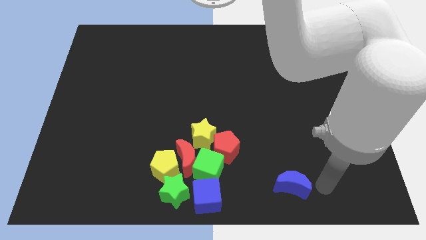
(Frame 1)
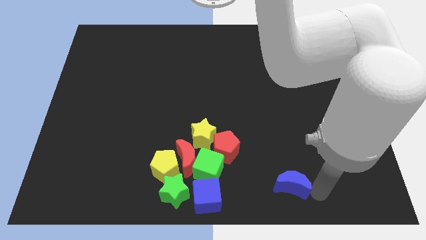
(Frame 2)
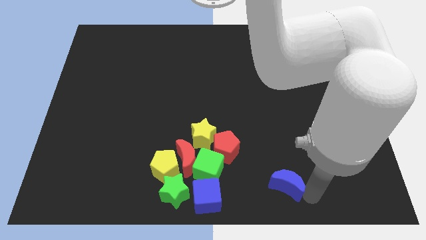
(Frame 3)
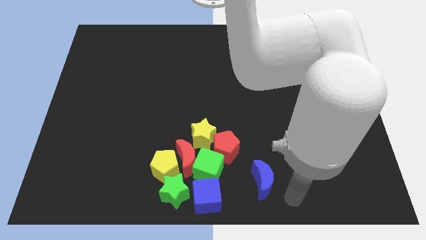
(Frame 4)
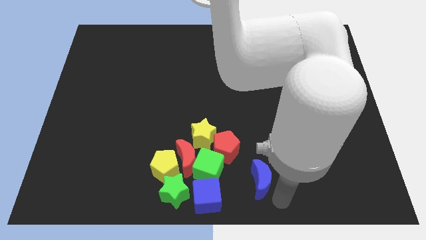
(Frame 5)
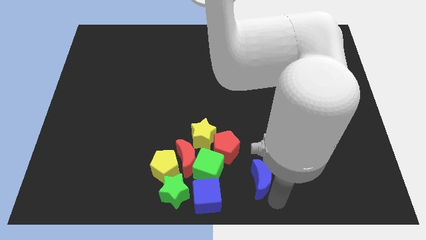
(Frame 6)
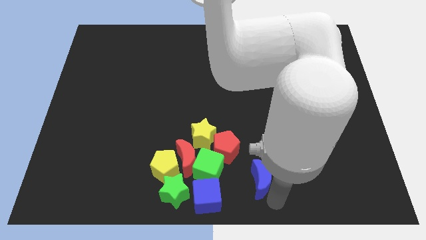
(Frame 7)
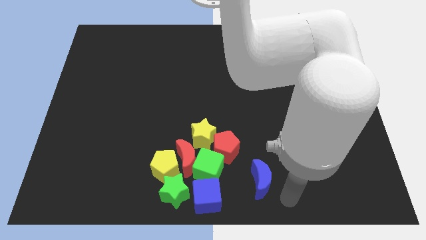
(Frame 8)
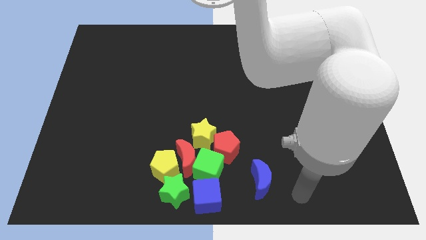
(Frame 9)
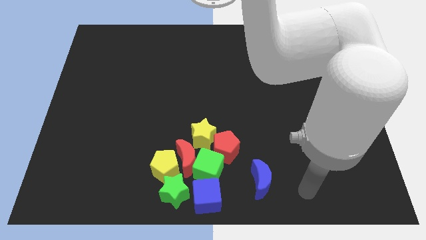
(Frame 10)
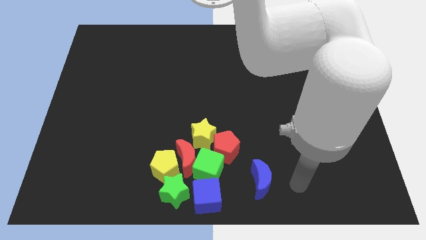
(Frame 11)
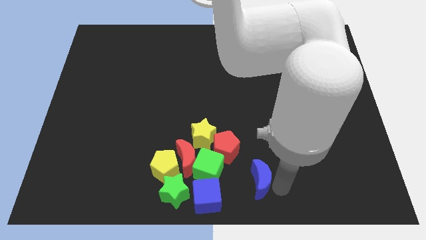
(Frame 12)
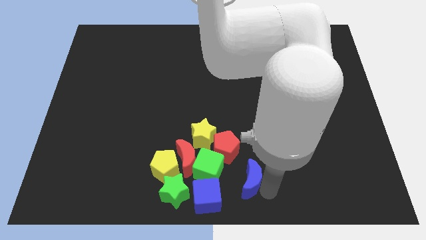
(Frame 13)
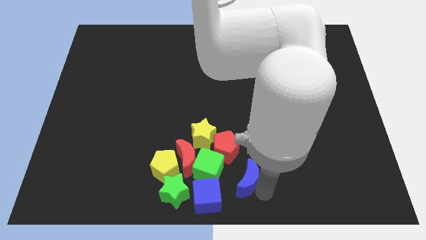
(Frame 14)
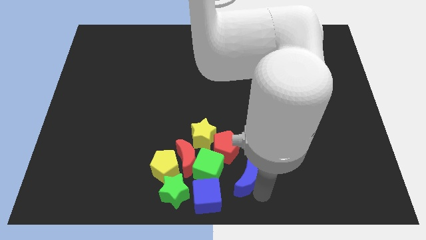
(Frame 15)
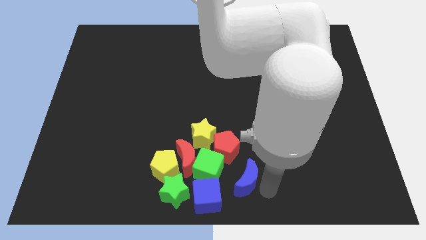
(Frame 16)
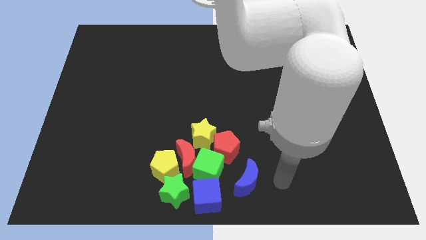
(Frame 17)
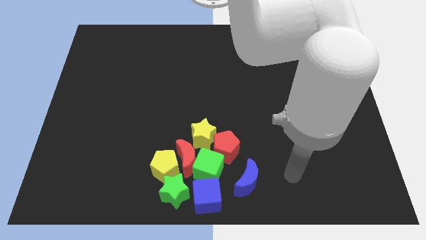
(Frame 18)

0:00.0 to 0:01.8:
push the blue moon towards group of blocks

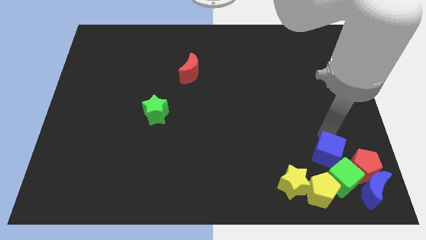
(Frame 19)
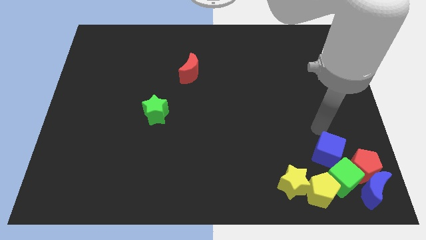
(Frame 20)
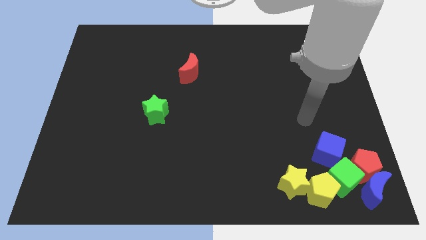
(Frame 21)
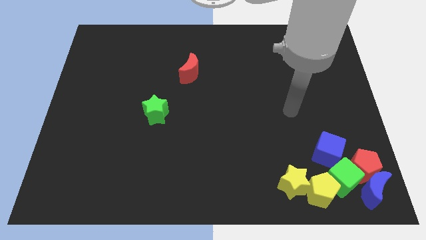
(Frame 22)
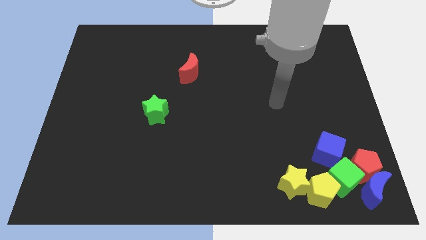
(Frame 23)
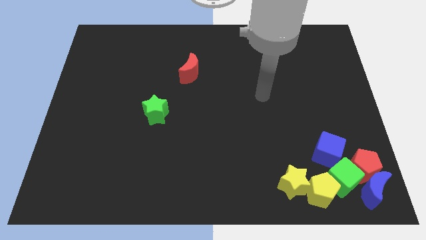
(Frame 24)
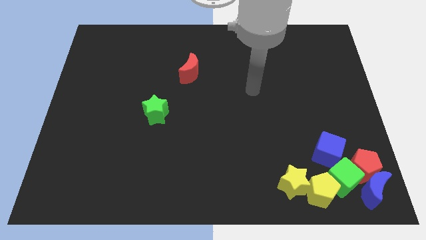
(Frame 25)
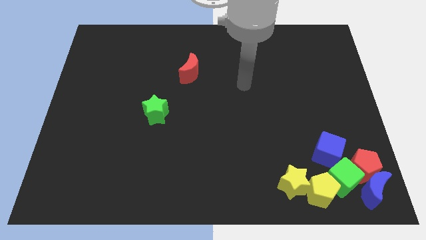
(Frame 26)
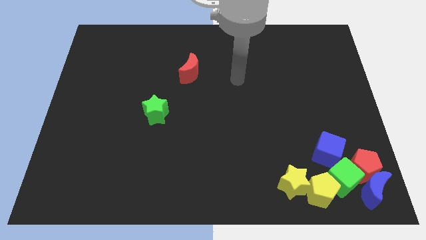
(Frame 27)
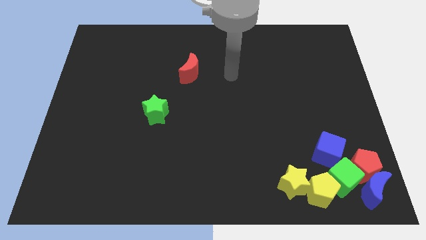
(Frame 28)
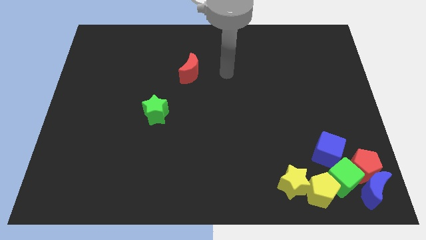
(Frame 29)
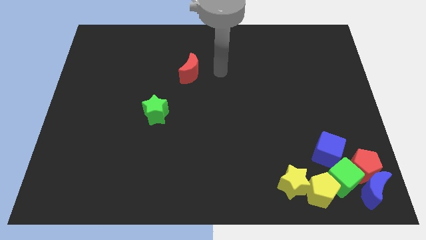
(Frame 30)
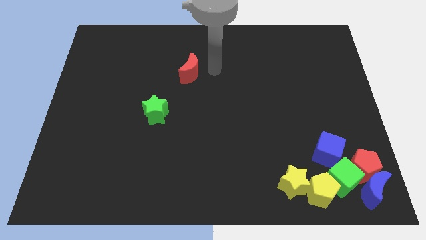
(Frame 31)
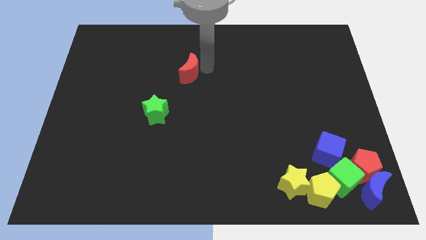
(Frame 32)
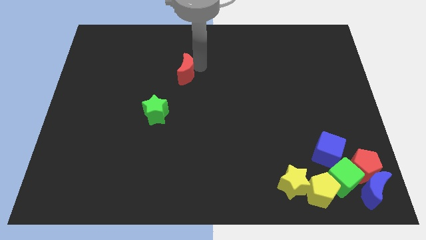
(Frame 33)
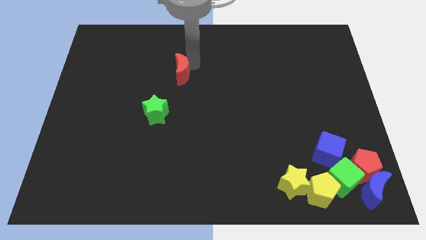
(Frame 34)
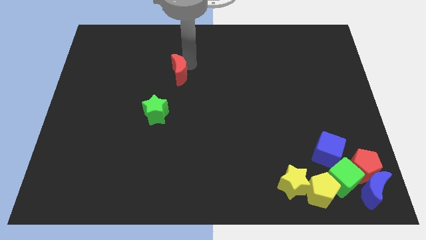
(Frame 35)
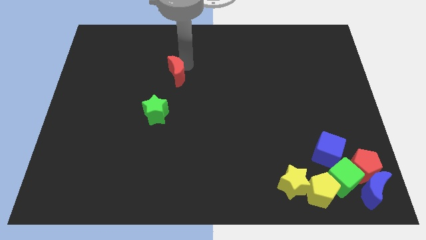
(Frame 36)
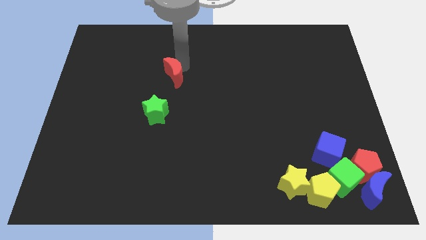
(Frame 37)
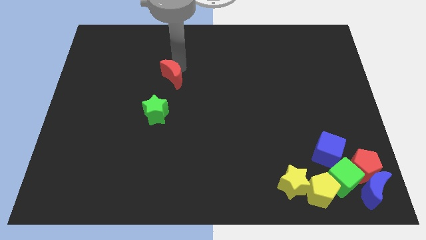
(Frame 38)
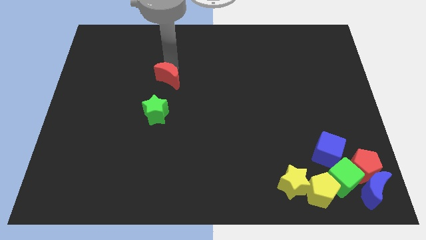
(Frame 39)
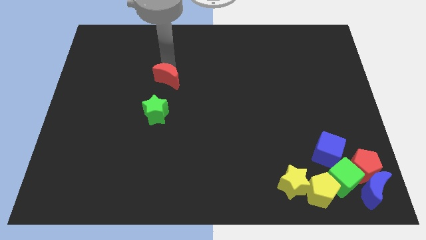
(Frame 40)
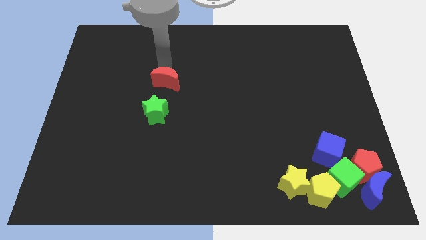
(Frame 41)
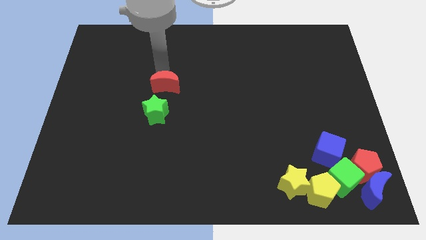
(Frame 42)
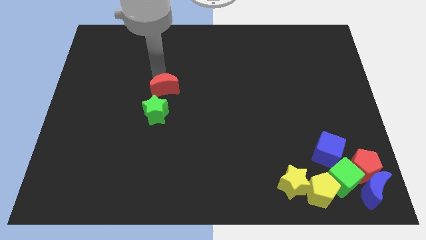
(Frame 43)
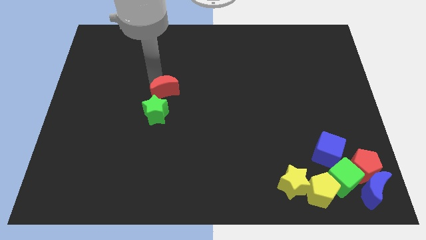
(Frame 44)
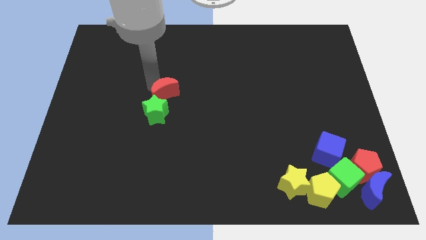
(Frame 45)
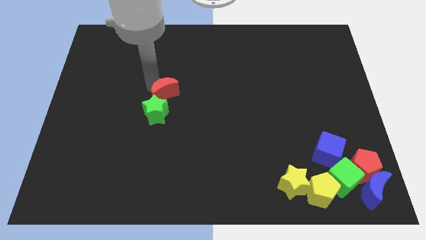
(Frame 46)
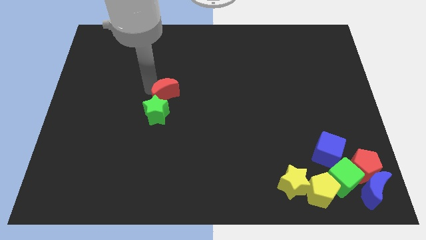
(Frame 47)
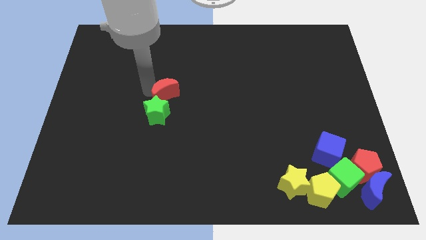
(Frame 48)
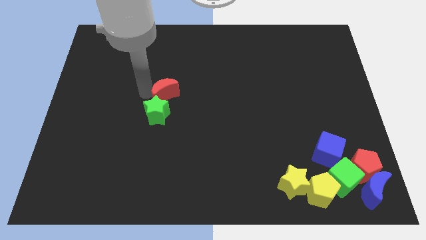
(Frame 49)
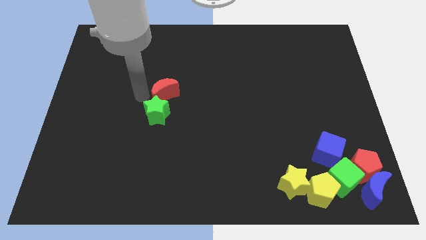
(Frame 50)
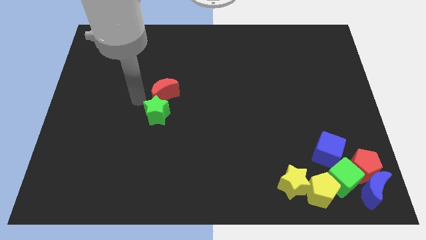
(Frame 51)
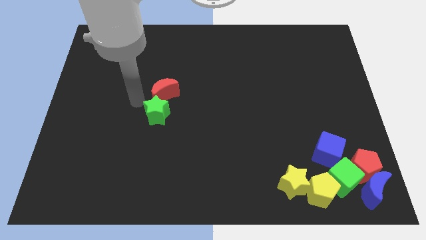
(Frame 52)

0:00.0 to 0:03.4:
move red crescent into top of green star

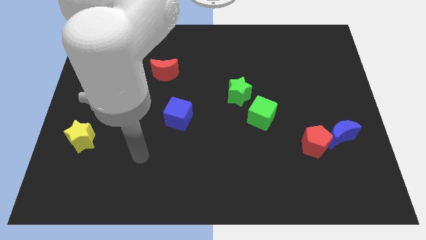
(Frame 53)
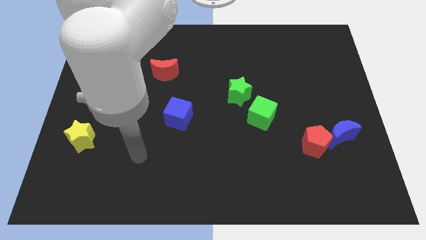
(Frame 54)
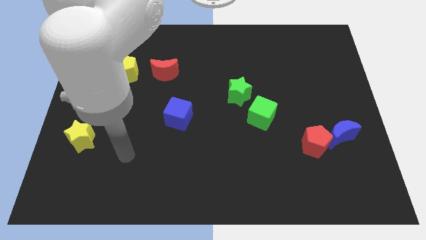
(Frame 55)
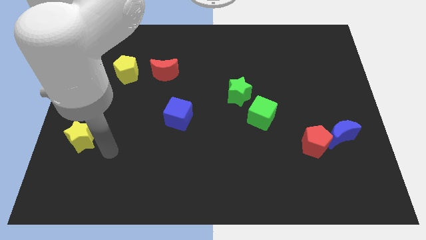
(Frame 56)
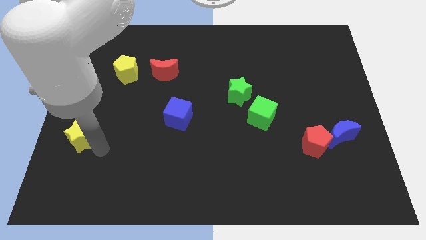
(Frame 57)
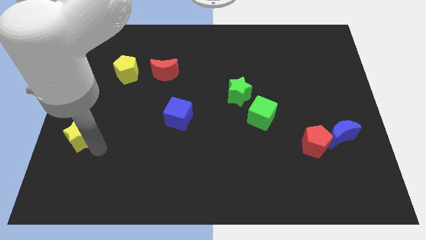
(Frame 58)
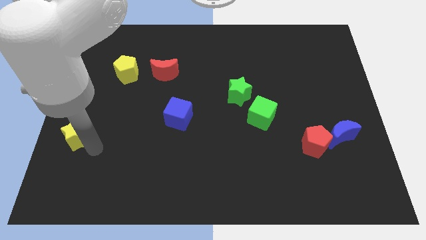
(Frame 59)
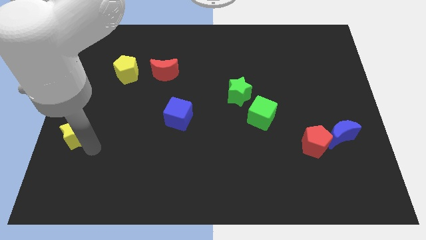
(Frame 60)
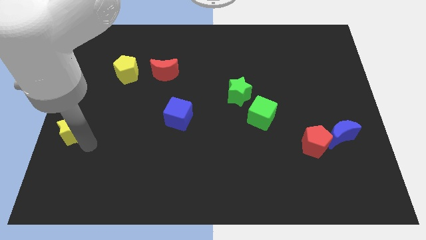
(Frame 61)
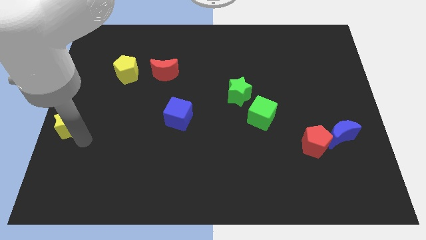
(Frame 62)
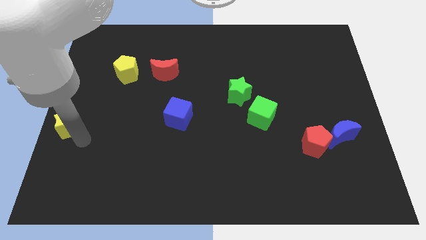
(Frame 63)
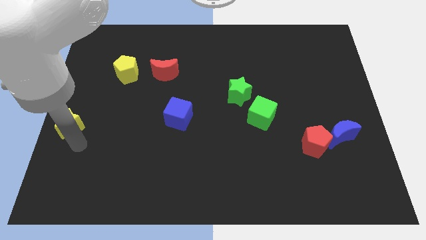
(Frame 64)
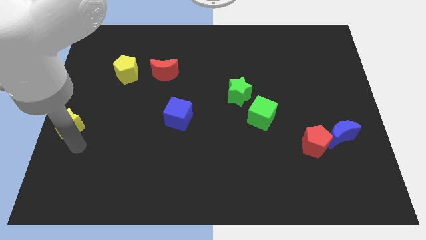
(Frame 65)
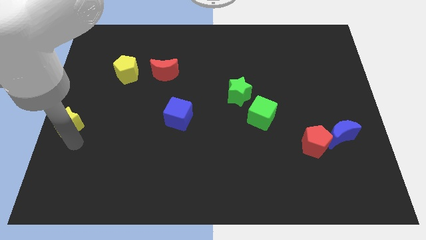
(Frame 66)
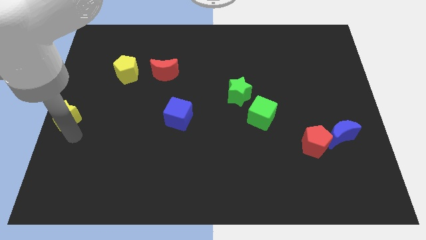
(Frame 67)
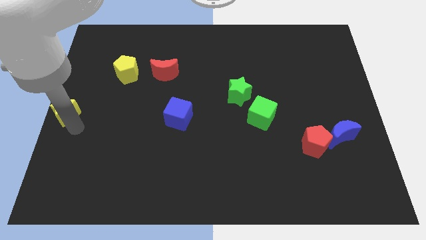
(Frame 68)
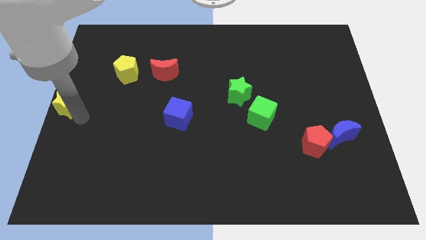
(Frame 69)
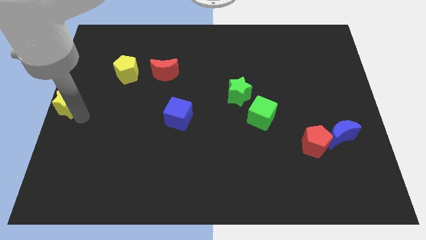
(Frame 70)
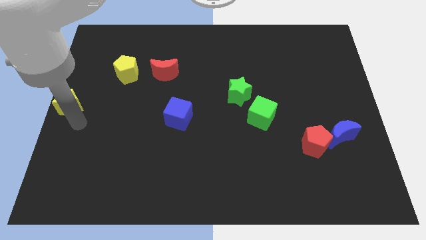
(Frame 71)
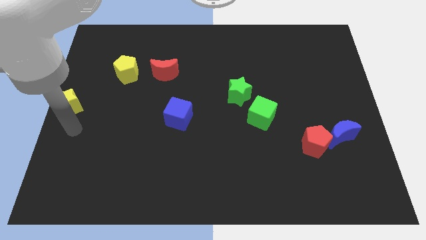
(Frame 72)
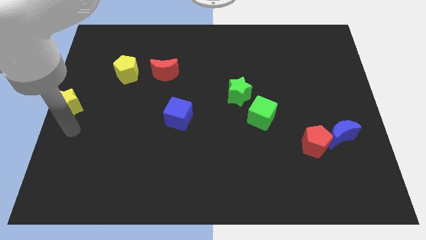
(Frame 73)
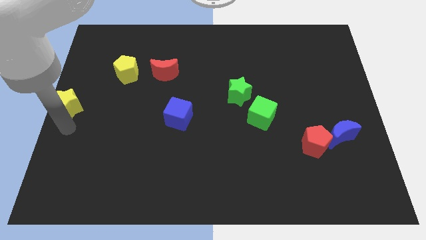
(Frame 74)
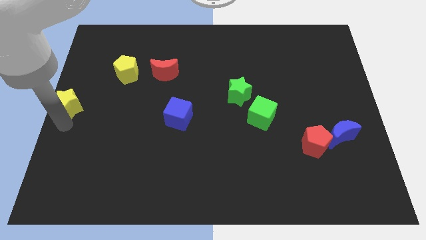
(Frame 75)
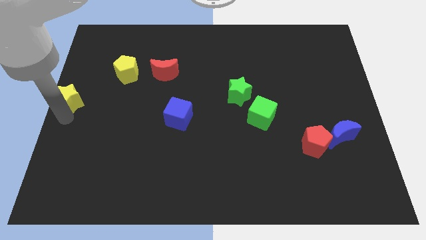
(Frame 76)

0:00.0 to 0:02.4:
move the yellow star to the left center of the board

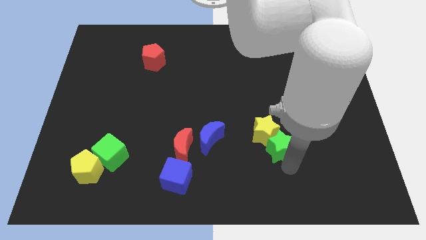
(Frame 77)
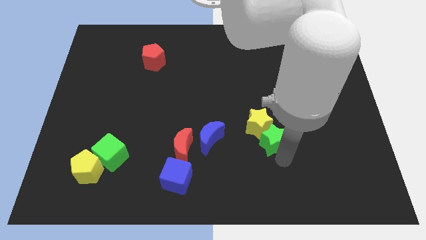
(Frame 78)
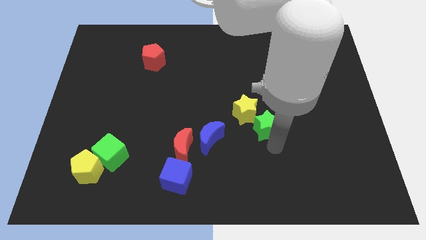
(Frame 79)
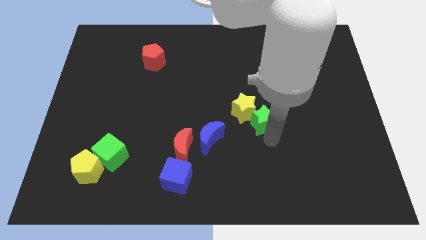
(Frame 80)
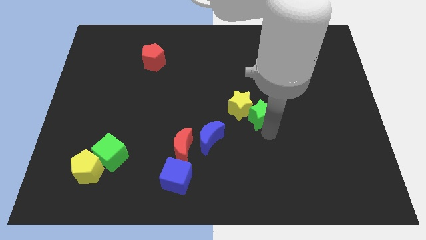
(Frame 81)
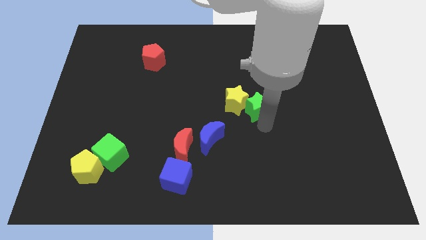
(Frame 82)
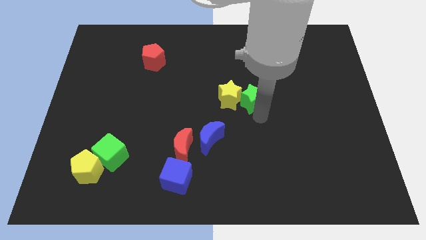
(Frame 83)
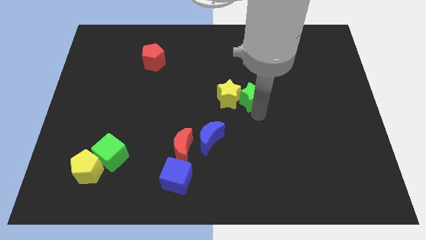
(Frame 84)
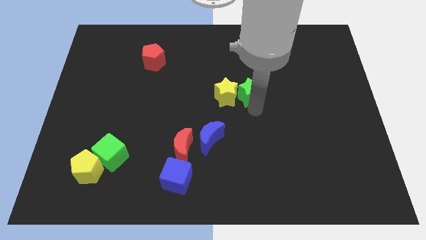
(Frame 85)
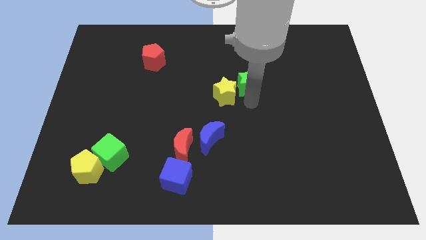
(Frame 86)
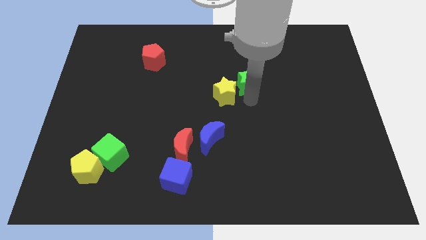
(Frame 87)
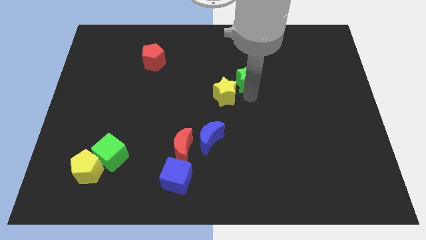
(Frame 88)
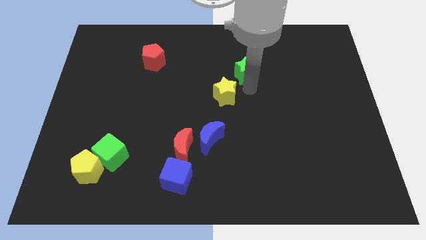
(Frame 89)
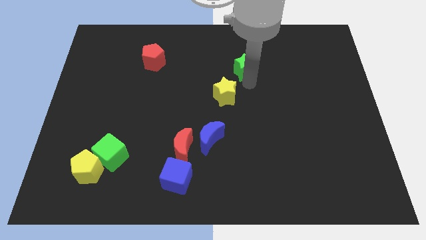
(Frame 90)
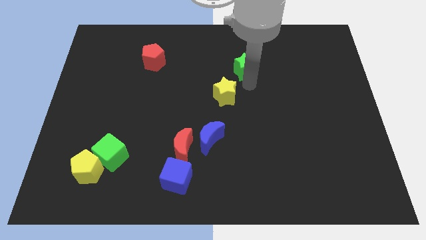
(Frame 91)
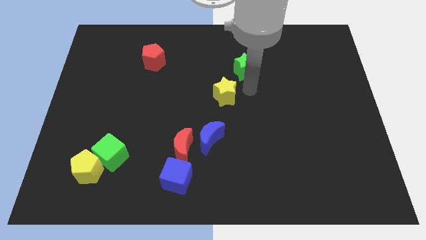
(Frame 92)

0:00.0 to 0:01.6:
slide the yellow star towards the center of the board
